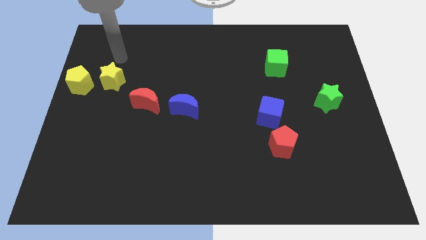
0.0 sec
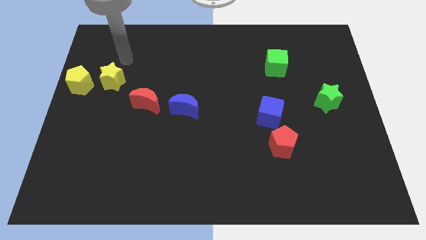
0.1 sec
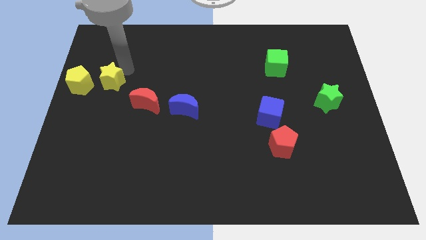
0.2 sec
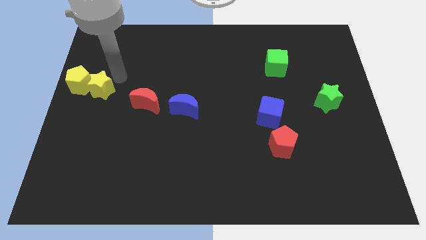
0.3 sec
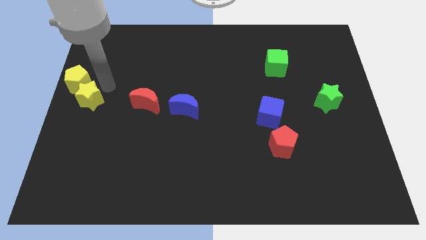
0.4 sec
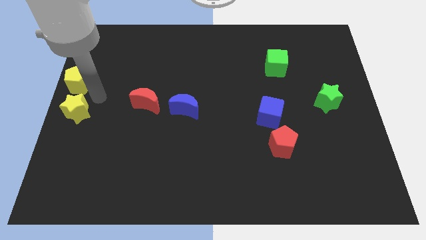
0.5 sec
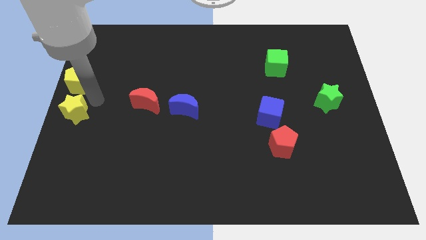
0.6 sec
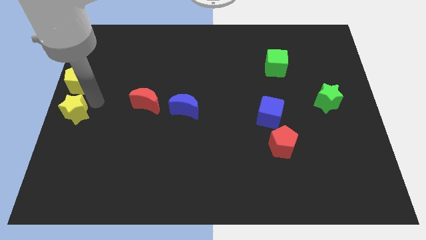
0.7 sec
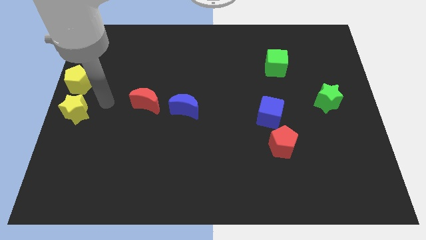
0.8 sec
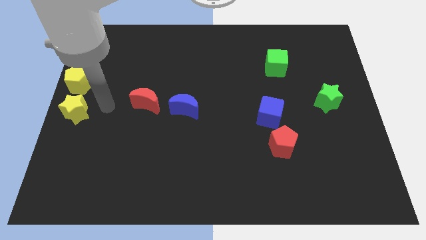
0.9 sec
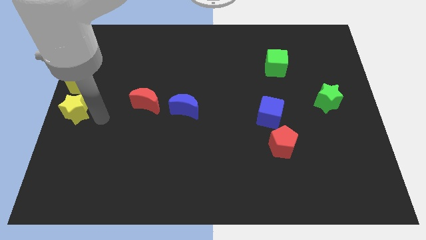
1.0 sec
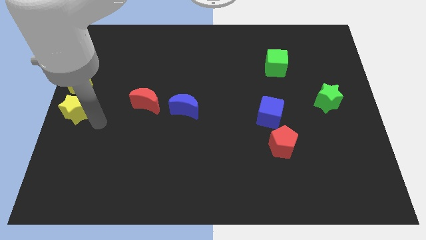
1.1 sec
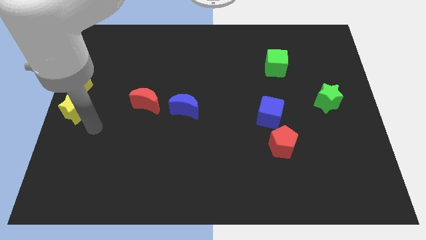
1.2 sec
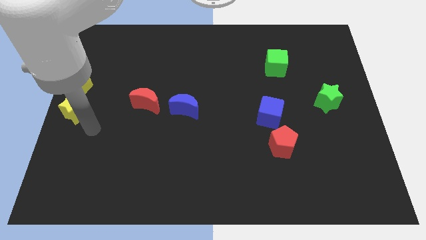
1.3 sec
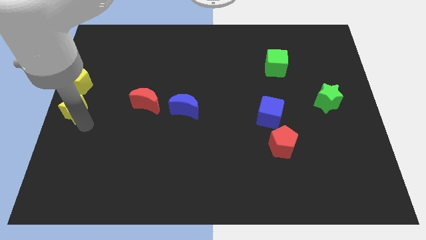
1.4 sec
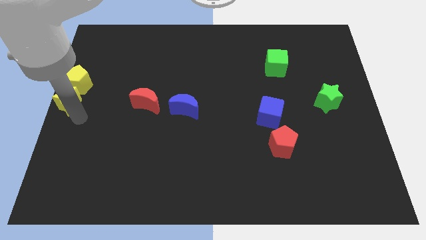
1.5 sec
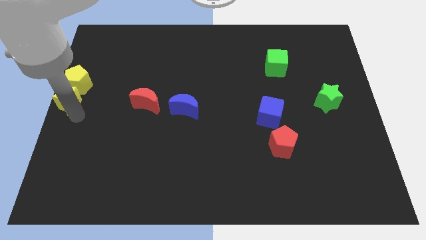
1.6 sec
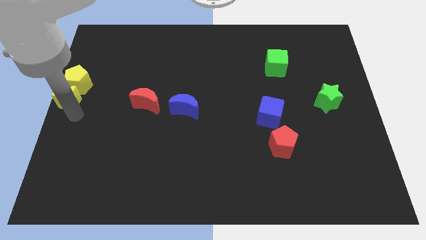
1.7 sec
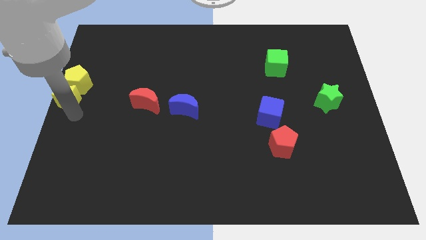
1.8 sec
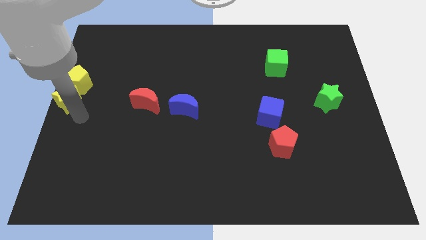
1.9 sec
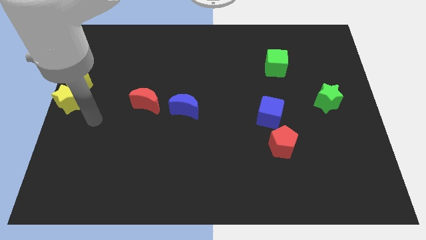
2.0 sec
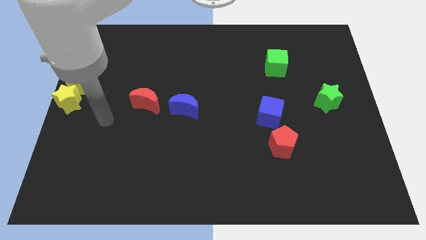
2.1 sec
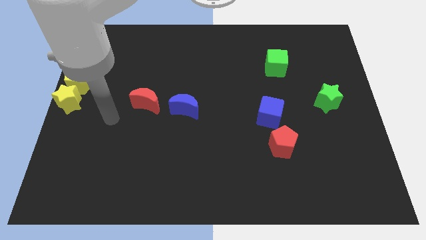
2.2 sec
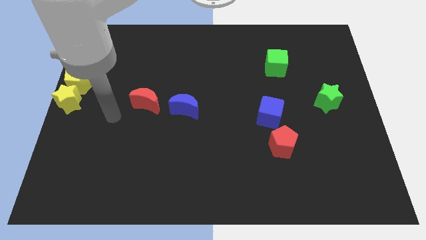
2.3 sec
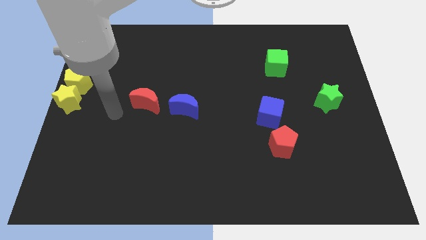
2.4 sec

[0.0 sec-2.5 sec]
place the yellow star at the bottom of the yellow pentagon

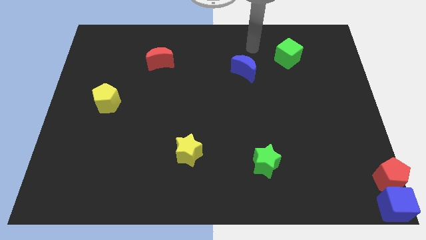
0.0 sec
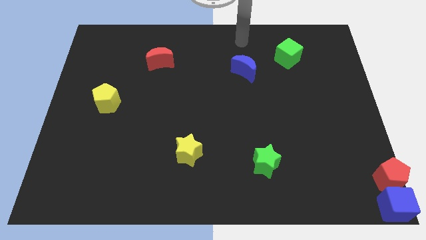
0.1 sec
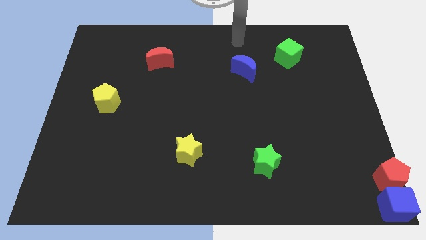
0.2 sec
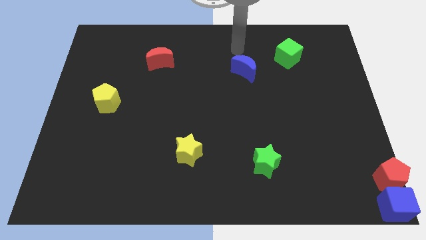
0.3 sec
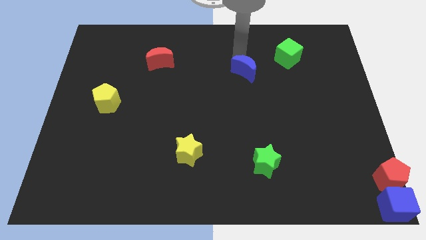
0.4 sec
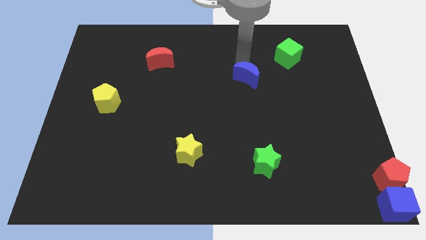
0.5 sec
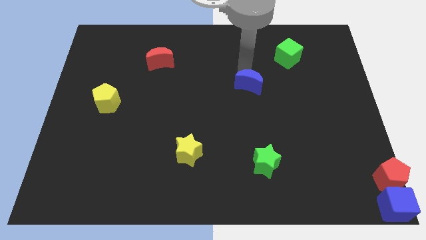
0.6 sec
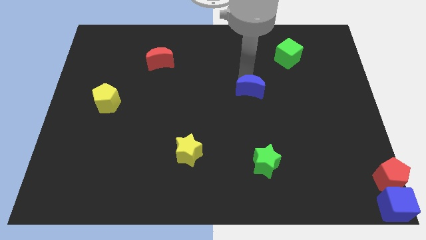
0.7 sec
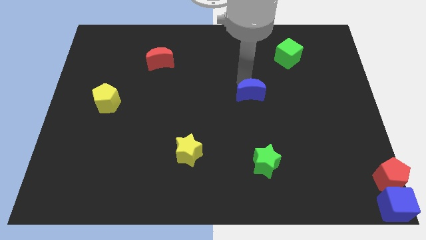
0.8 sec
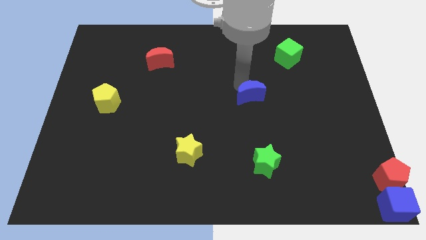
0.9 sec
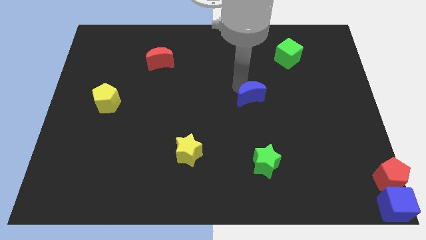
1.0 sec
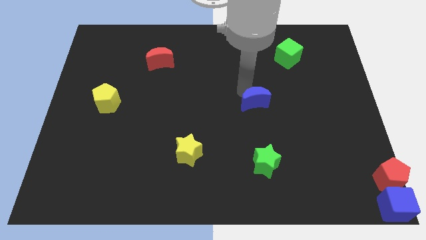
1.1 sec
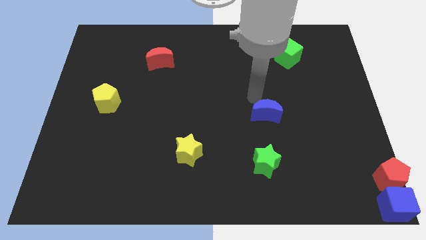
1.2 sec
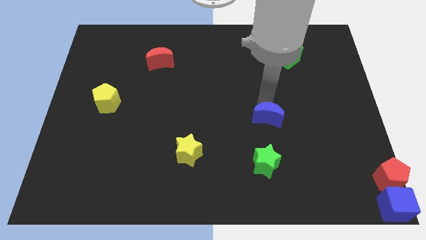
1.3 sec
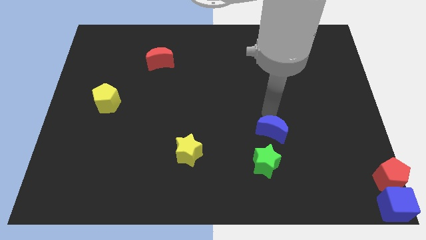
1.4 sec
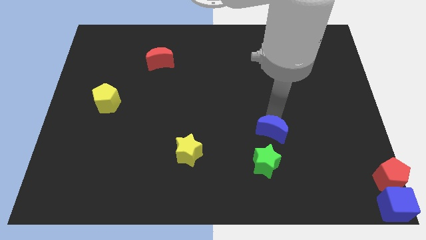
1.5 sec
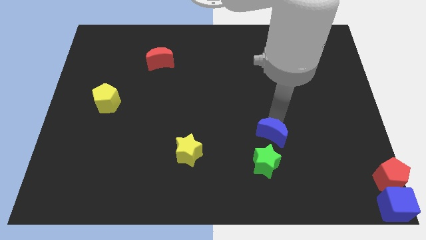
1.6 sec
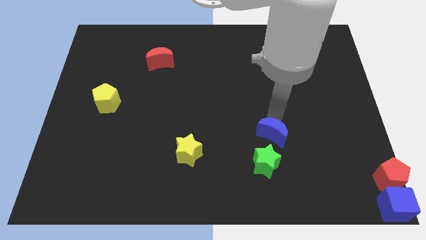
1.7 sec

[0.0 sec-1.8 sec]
place the blue crescent above the green star

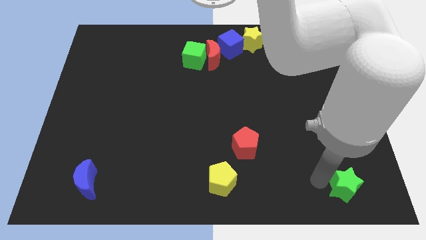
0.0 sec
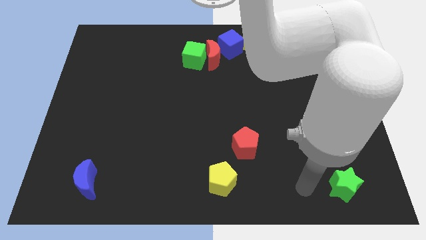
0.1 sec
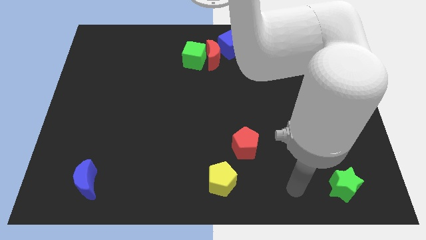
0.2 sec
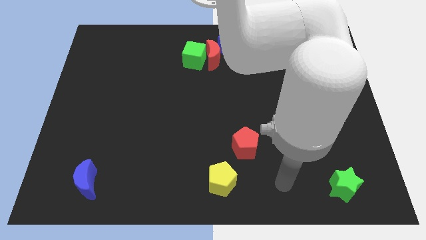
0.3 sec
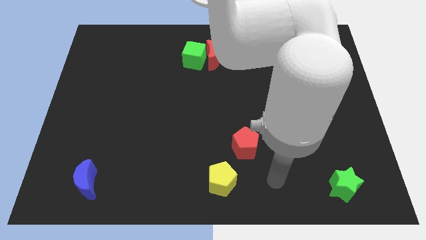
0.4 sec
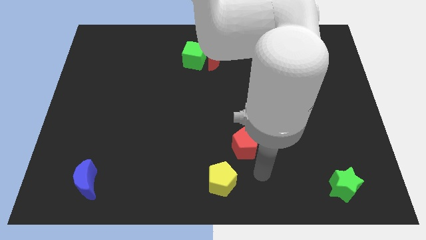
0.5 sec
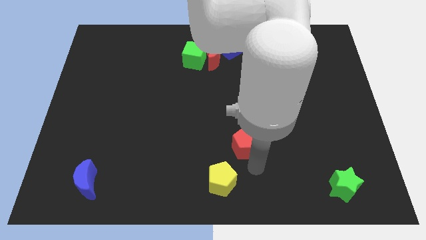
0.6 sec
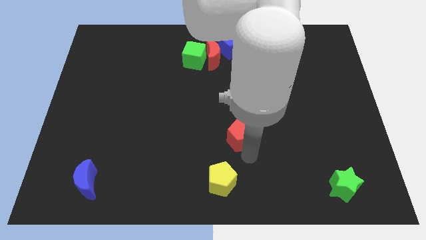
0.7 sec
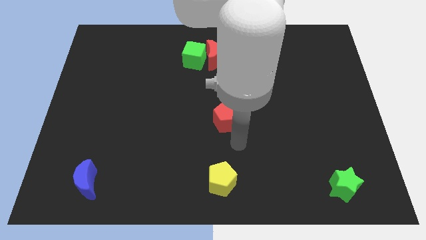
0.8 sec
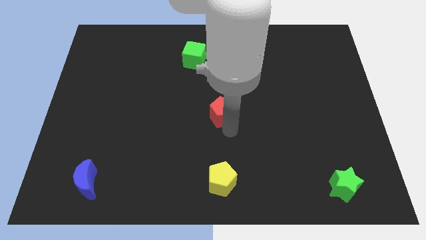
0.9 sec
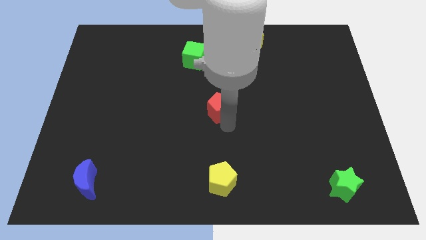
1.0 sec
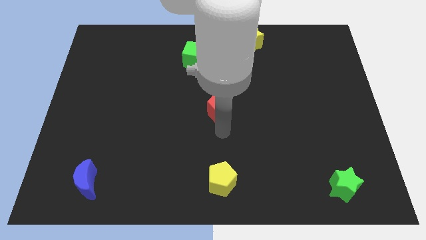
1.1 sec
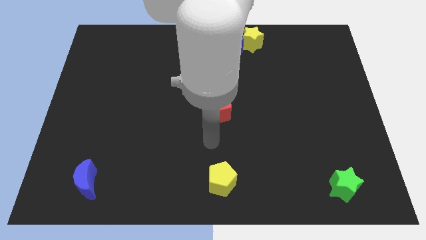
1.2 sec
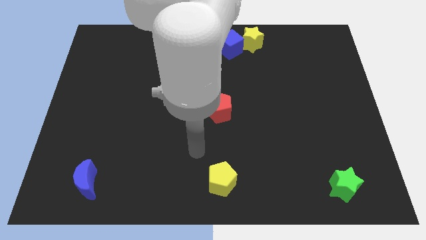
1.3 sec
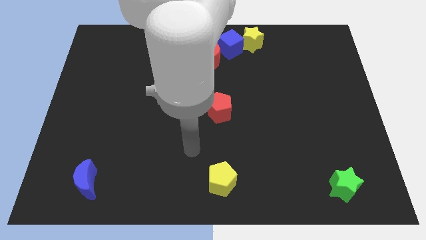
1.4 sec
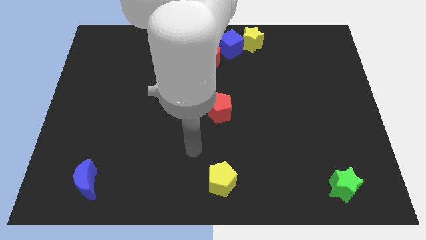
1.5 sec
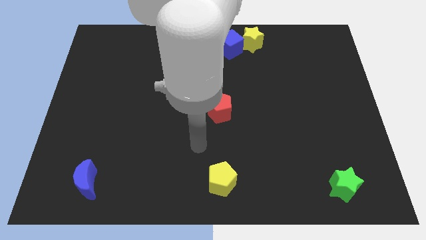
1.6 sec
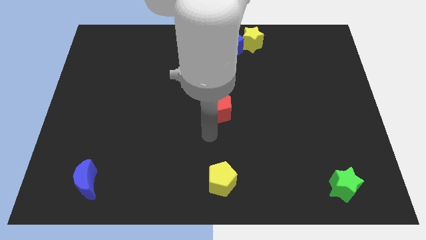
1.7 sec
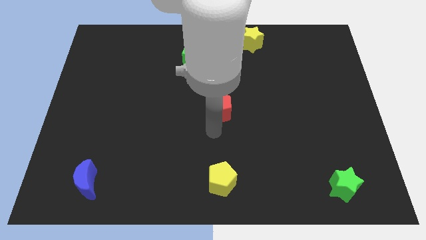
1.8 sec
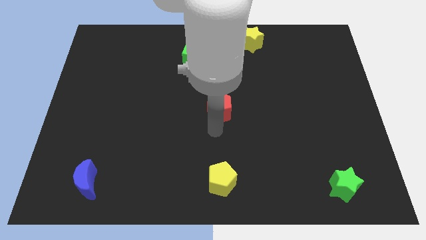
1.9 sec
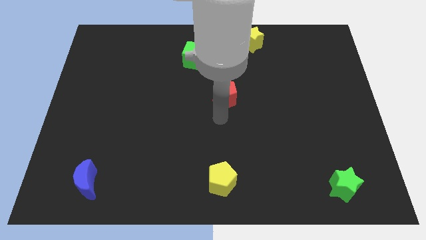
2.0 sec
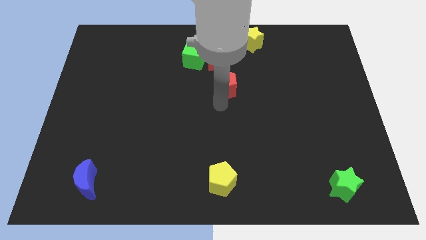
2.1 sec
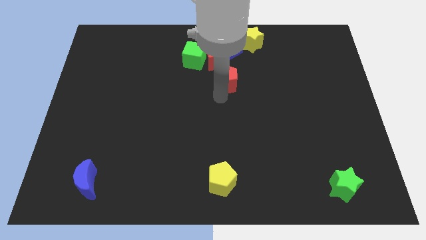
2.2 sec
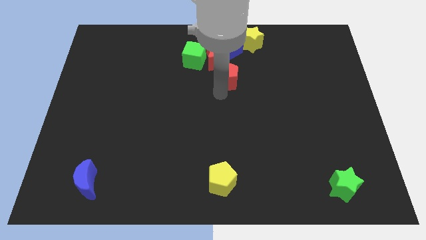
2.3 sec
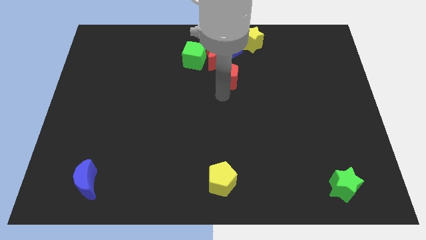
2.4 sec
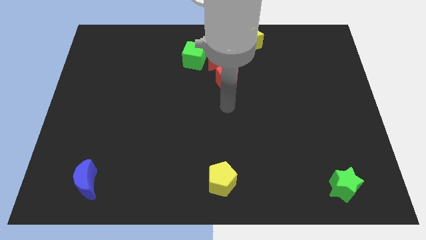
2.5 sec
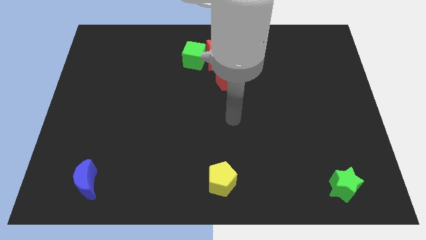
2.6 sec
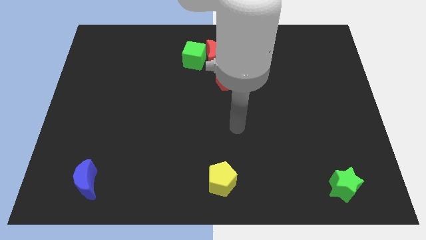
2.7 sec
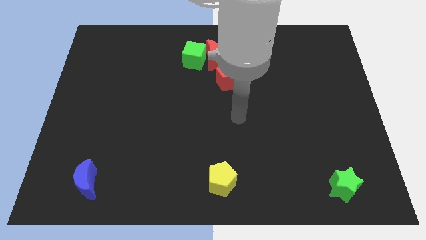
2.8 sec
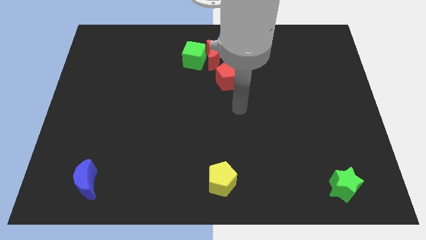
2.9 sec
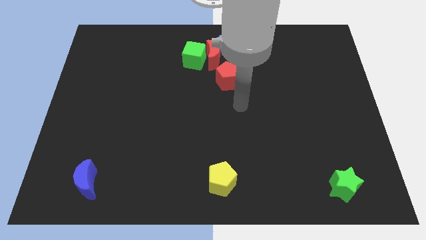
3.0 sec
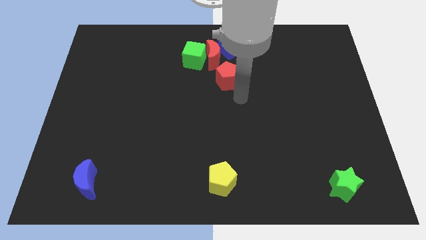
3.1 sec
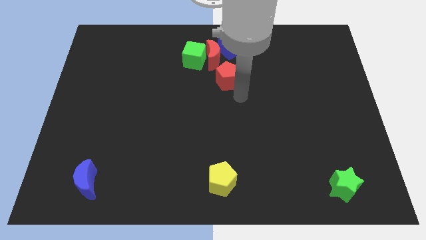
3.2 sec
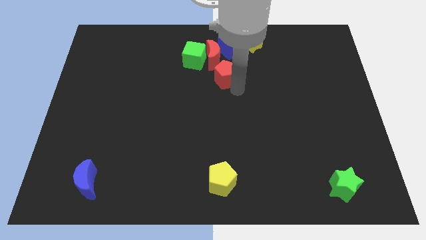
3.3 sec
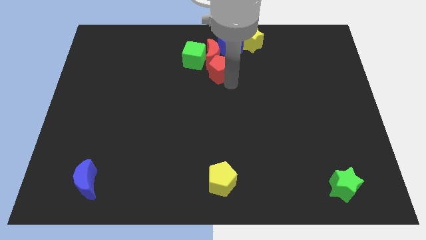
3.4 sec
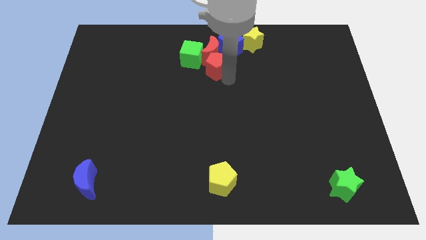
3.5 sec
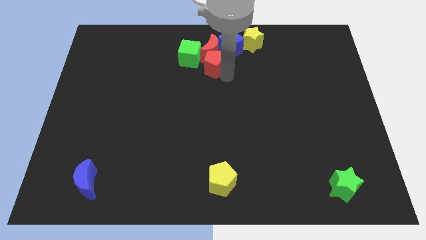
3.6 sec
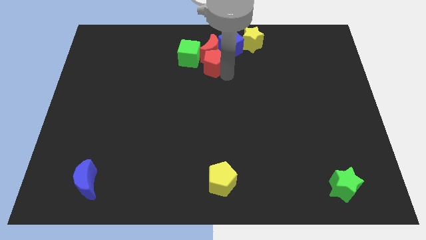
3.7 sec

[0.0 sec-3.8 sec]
slide the red pentagon into the bottom side of the red crescent

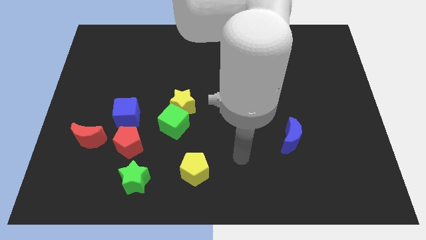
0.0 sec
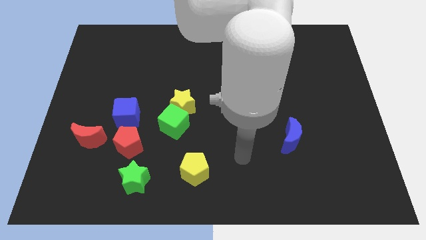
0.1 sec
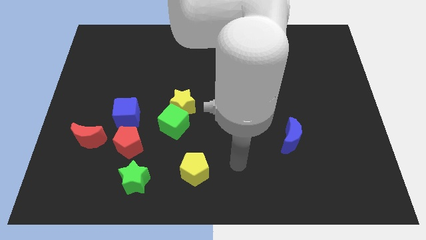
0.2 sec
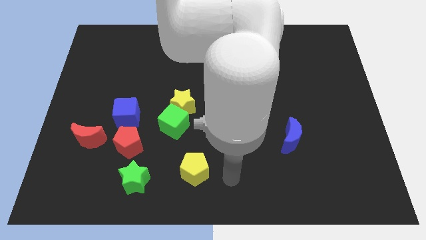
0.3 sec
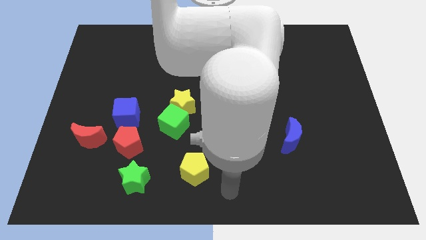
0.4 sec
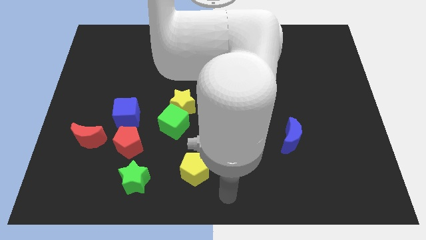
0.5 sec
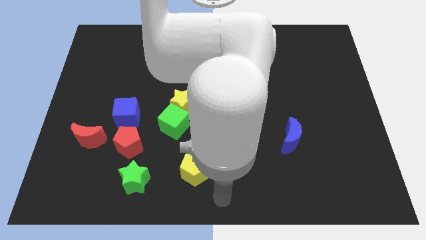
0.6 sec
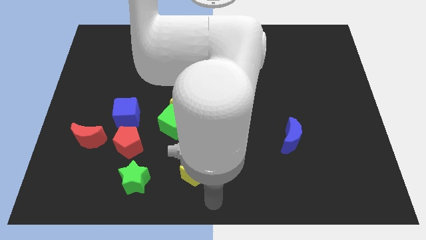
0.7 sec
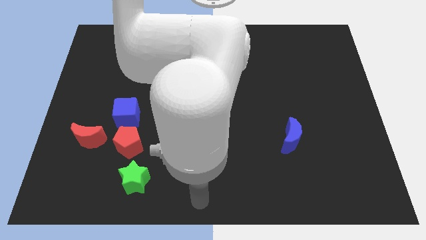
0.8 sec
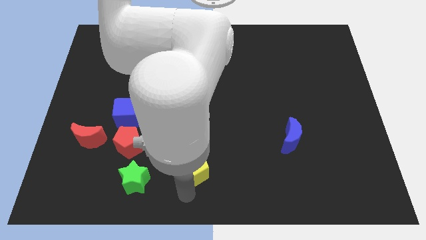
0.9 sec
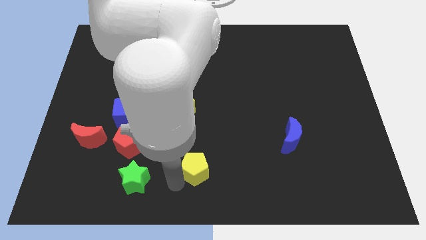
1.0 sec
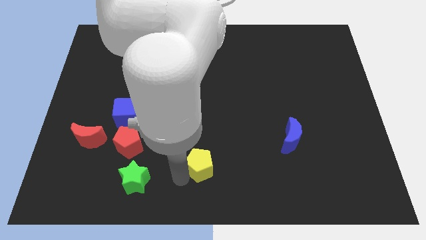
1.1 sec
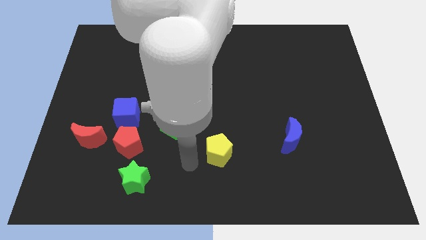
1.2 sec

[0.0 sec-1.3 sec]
push the yellow pentagon towards the blue moon
